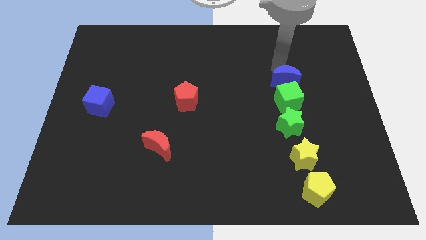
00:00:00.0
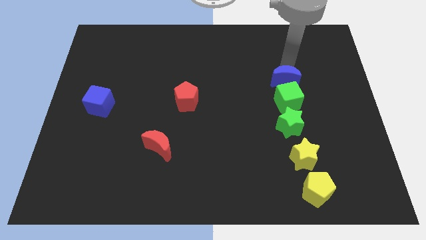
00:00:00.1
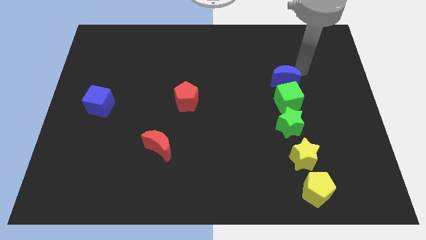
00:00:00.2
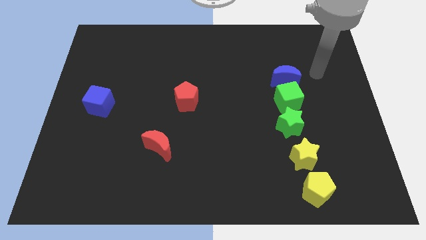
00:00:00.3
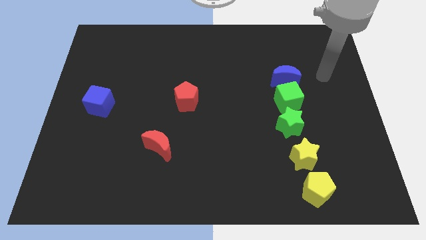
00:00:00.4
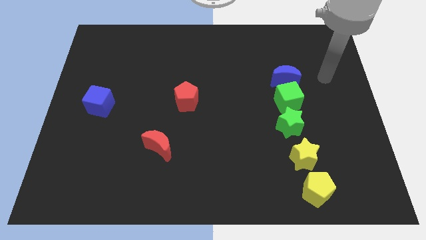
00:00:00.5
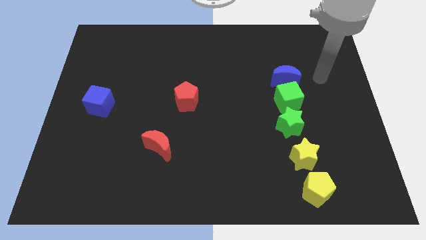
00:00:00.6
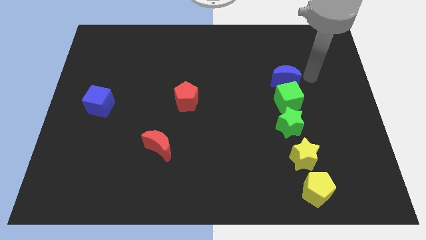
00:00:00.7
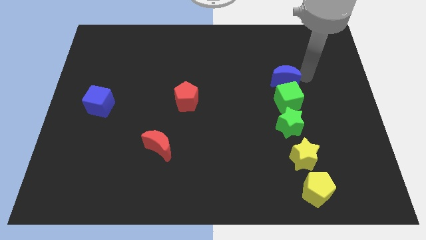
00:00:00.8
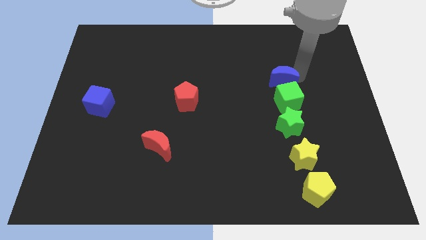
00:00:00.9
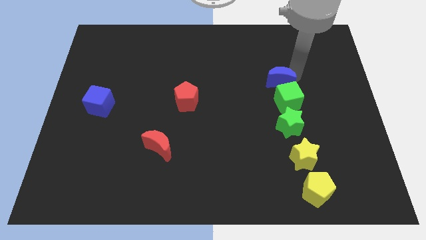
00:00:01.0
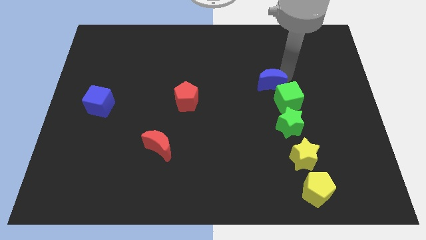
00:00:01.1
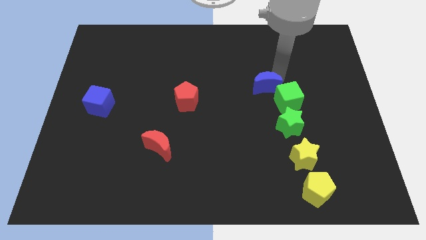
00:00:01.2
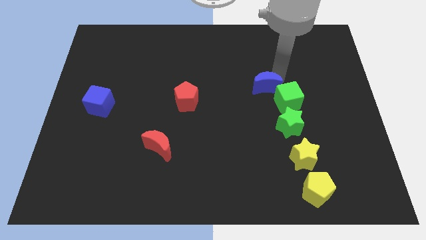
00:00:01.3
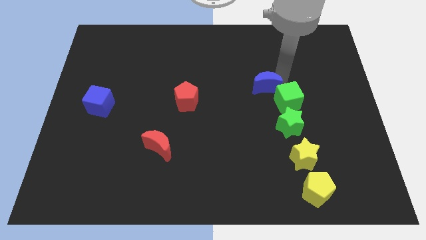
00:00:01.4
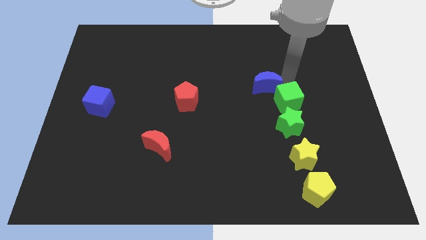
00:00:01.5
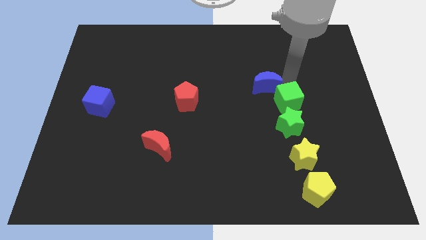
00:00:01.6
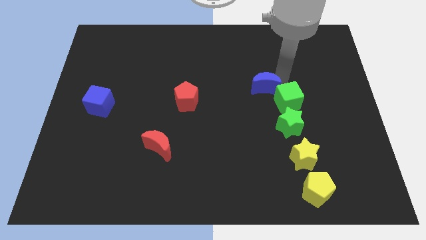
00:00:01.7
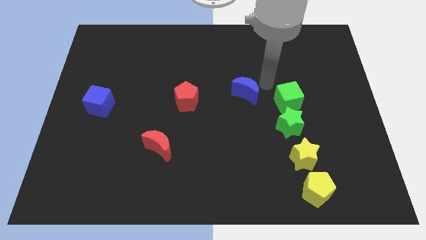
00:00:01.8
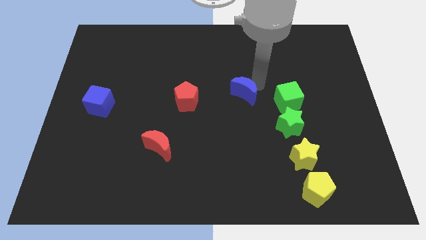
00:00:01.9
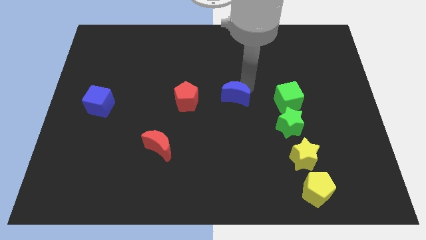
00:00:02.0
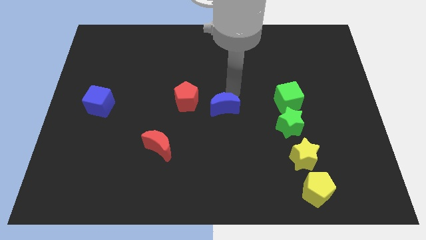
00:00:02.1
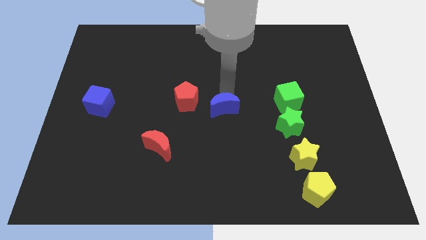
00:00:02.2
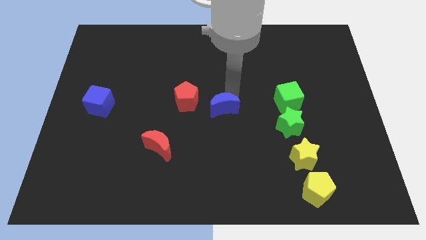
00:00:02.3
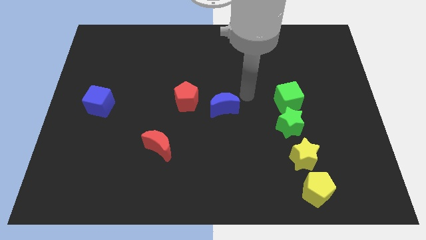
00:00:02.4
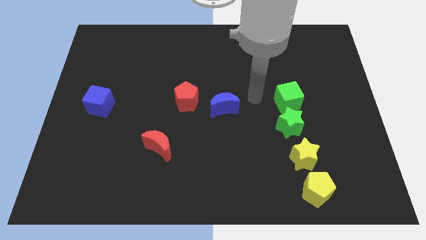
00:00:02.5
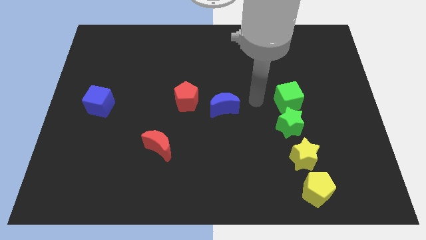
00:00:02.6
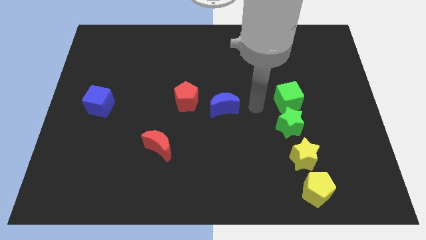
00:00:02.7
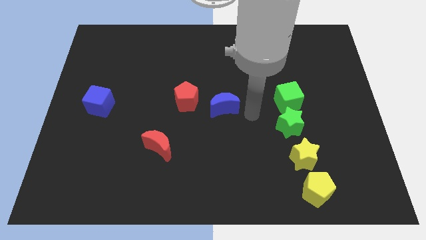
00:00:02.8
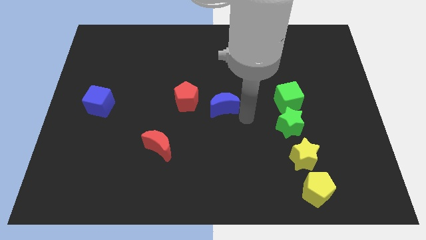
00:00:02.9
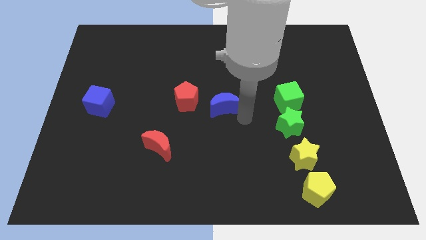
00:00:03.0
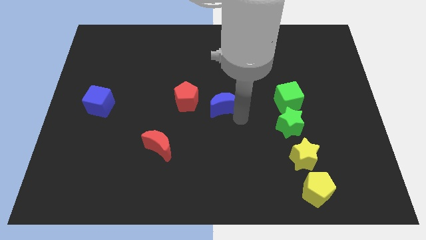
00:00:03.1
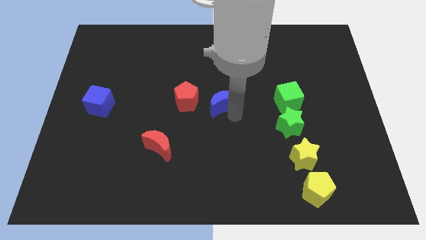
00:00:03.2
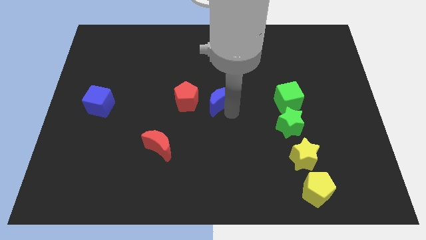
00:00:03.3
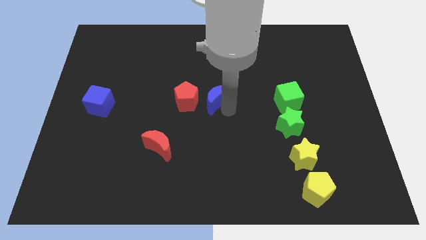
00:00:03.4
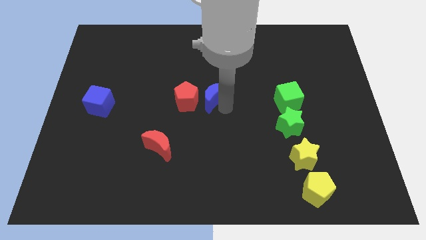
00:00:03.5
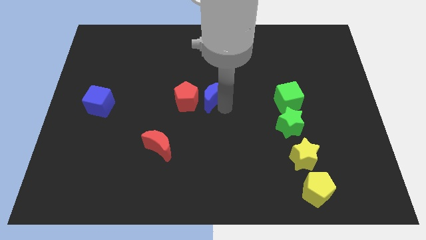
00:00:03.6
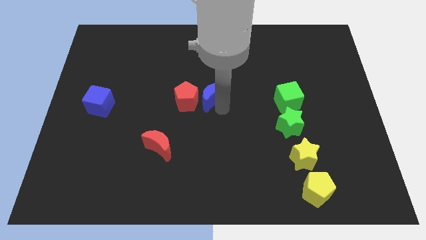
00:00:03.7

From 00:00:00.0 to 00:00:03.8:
place the blue moon in between red pentagon and green cube

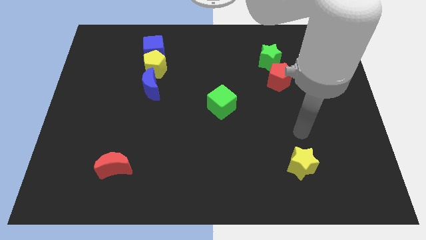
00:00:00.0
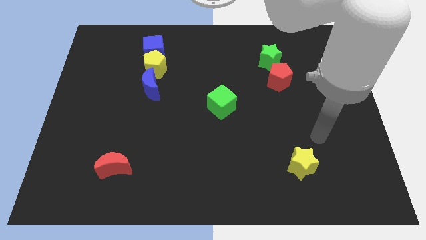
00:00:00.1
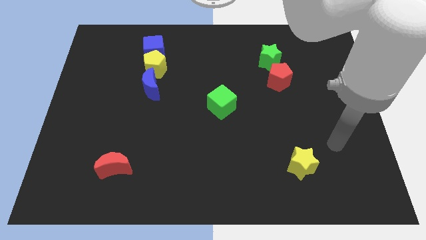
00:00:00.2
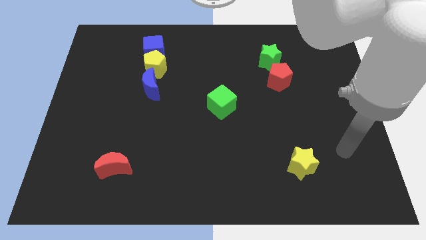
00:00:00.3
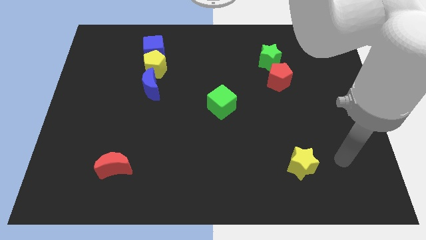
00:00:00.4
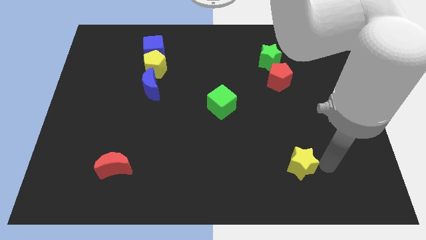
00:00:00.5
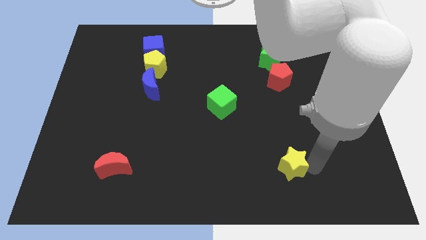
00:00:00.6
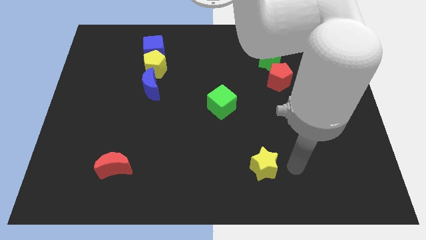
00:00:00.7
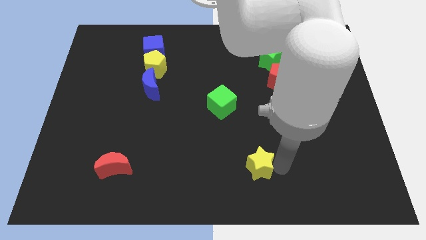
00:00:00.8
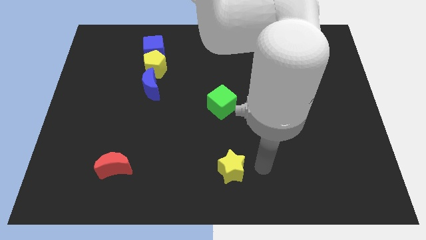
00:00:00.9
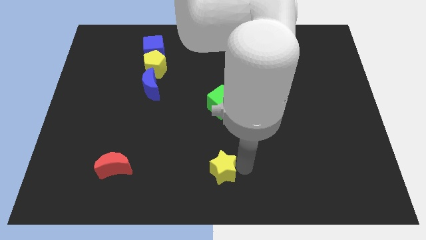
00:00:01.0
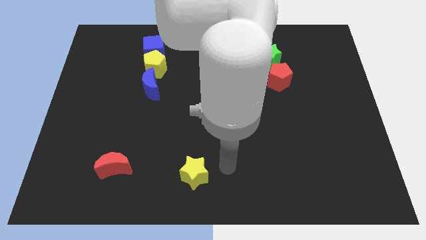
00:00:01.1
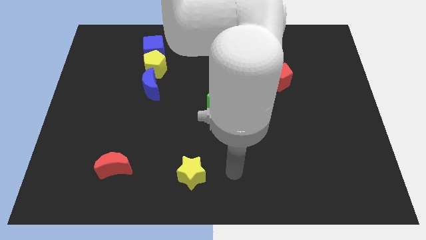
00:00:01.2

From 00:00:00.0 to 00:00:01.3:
slide the yellow star towards the right side of the red crescent

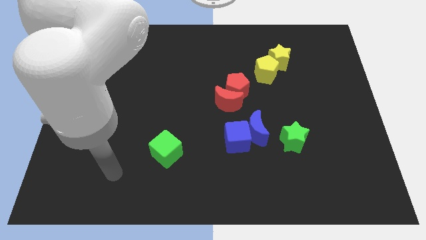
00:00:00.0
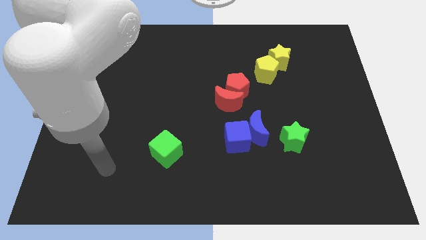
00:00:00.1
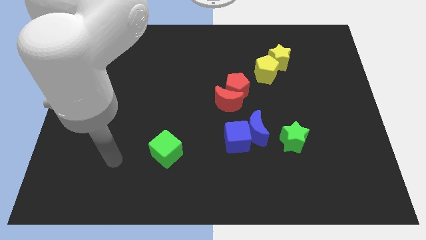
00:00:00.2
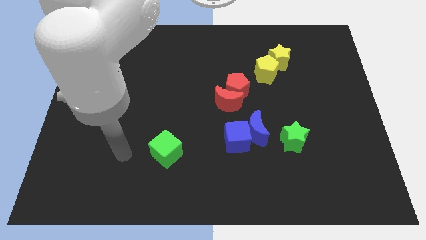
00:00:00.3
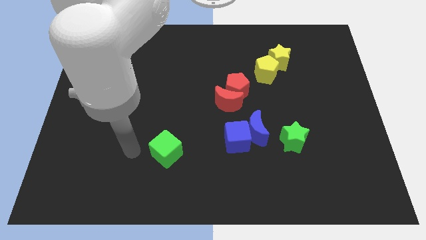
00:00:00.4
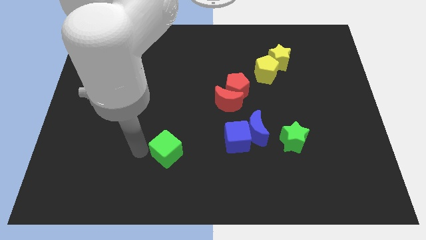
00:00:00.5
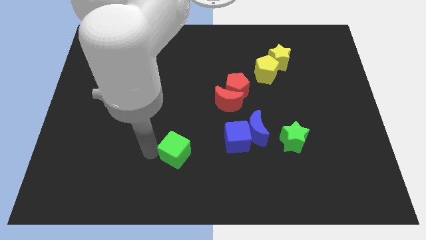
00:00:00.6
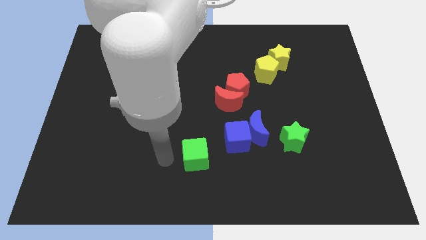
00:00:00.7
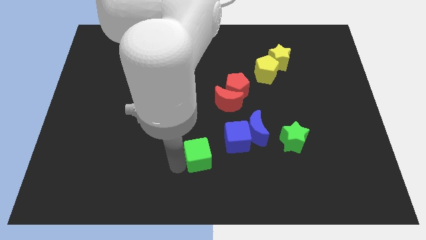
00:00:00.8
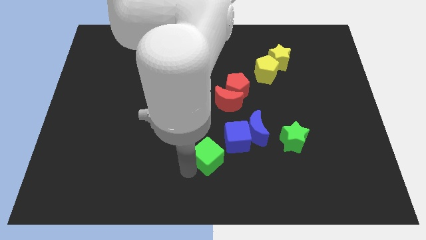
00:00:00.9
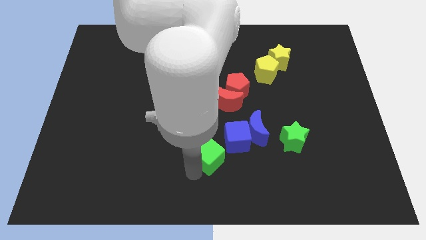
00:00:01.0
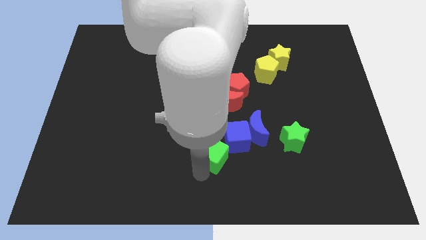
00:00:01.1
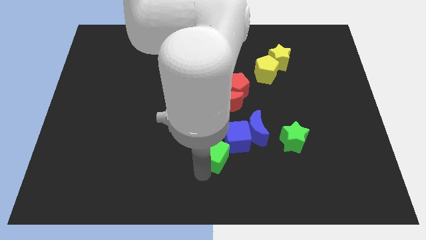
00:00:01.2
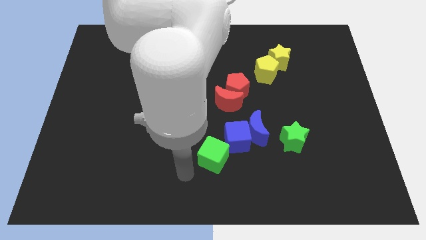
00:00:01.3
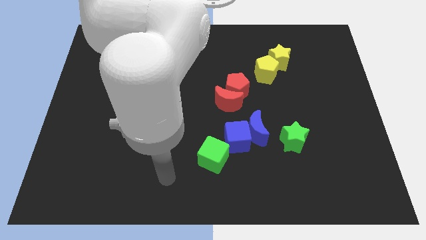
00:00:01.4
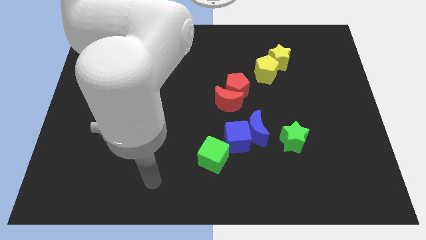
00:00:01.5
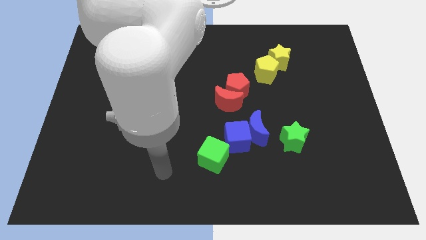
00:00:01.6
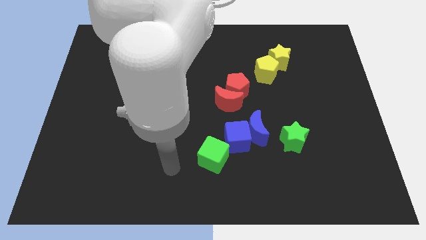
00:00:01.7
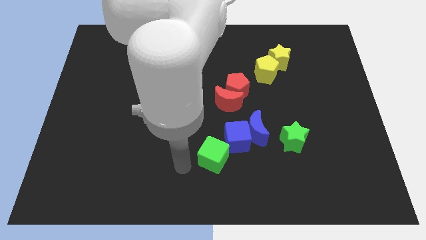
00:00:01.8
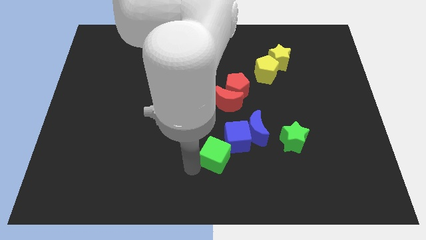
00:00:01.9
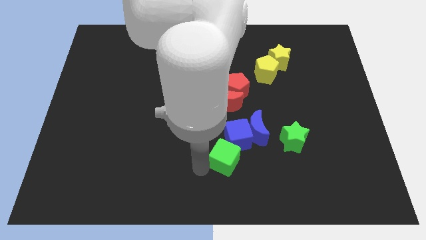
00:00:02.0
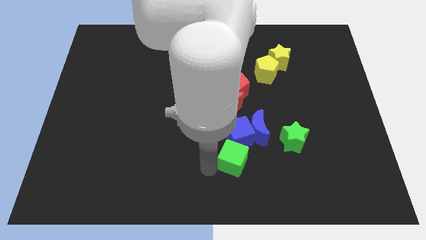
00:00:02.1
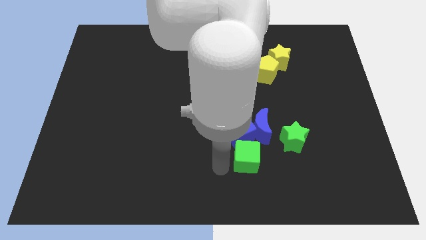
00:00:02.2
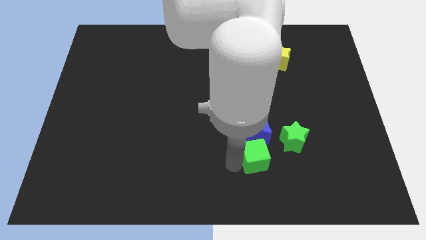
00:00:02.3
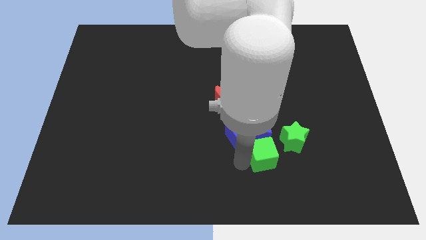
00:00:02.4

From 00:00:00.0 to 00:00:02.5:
move the green cube to the bottom of the blue crescent

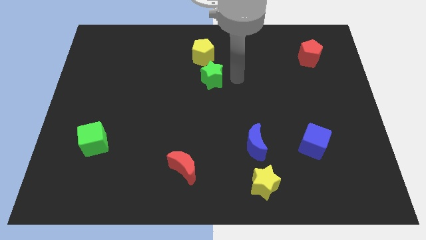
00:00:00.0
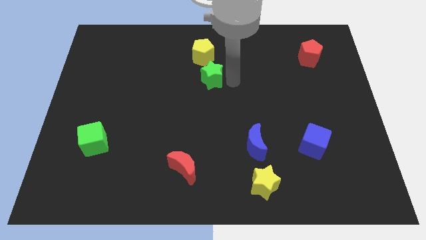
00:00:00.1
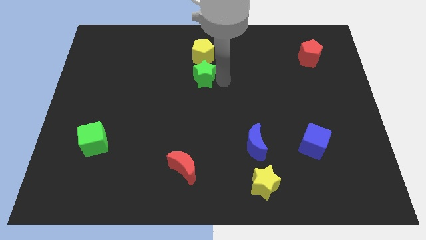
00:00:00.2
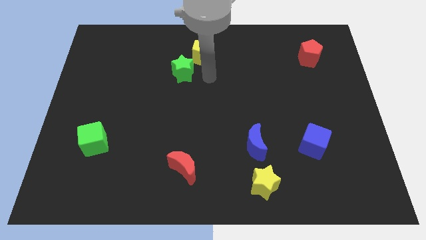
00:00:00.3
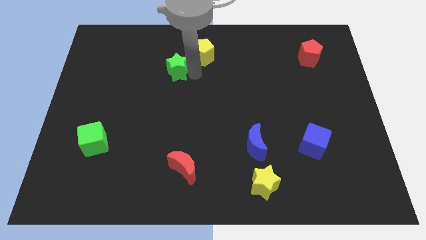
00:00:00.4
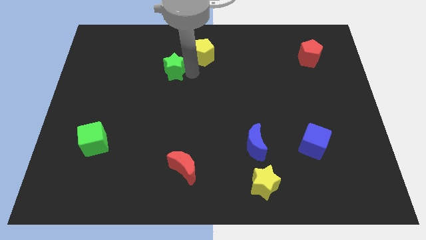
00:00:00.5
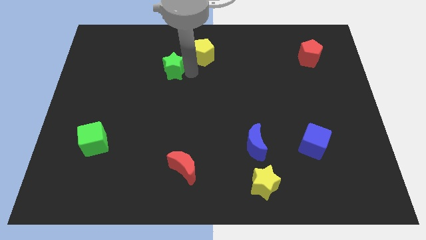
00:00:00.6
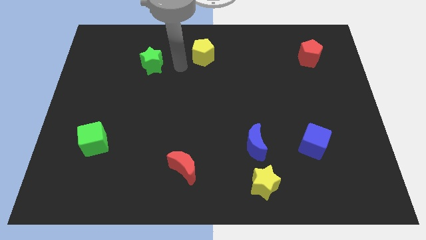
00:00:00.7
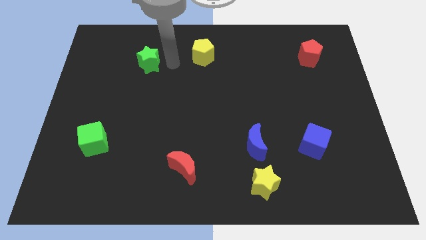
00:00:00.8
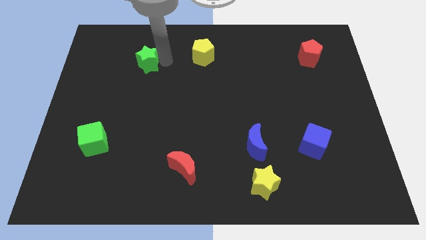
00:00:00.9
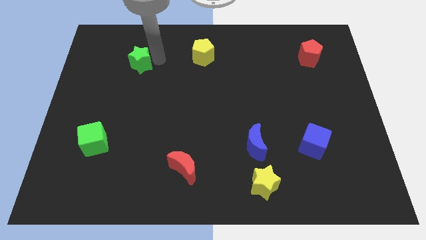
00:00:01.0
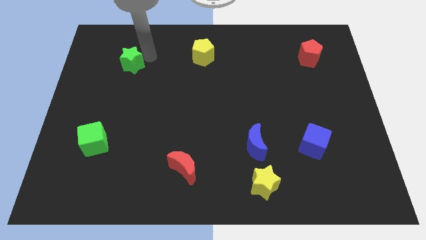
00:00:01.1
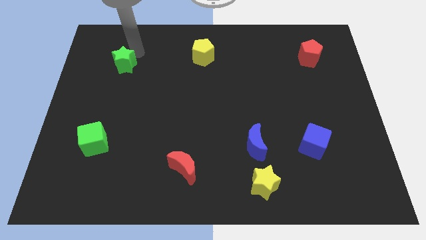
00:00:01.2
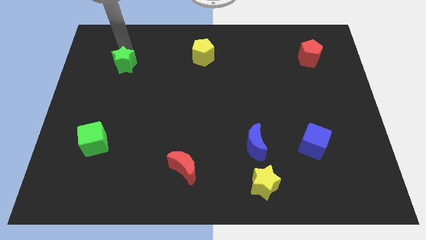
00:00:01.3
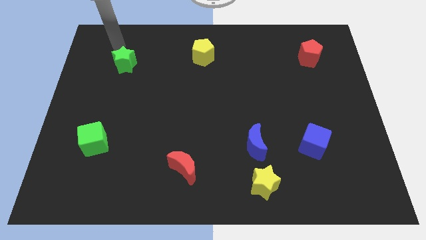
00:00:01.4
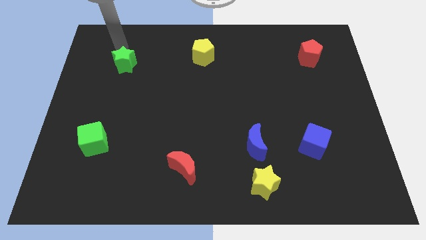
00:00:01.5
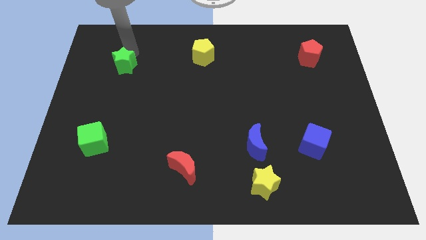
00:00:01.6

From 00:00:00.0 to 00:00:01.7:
place the green star left to the yellow pentagon
